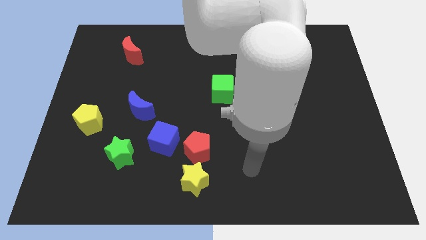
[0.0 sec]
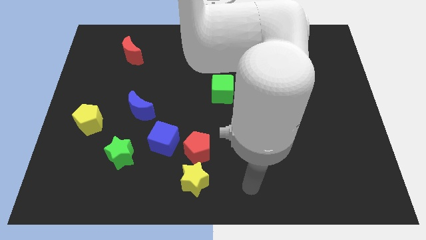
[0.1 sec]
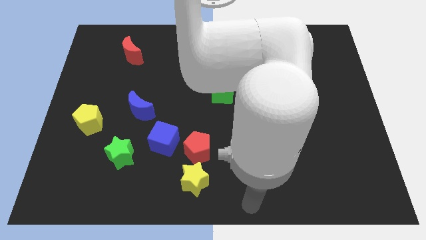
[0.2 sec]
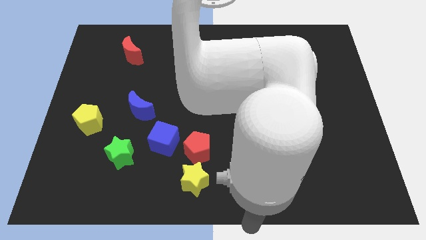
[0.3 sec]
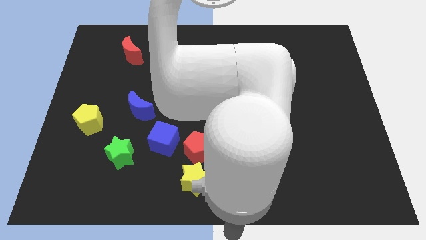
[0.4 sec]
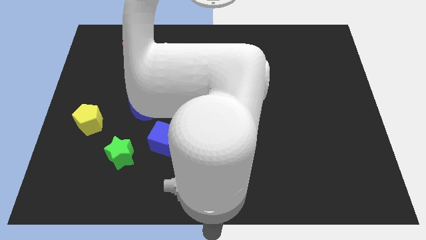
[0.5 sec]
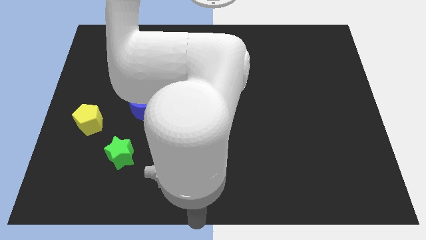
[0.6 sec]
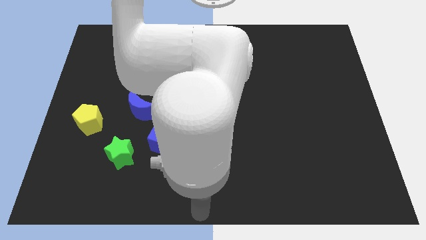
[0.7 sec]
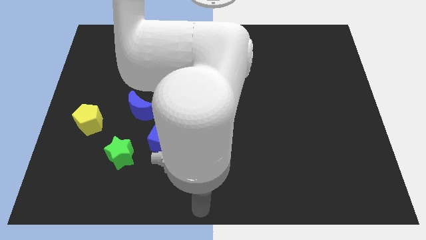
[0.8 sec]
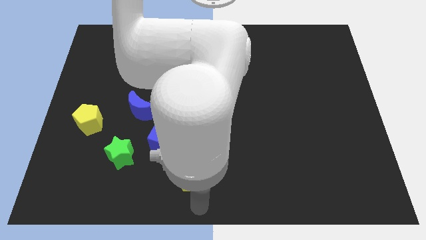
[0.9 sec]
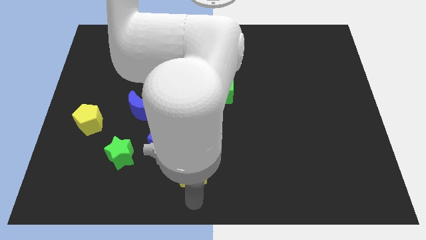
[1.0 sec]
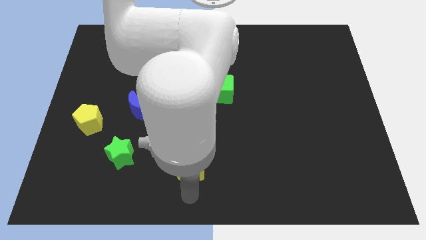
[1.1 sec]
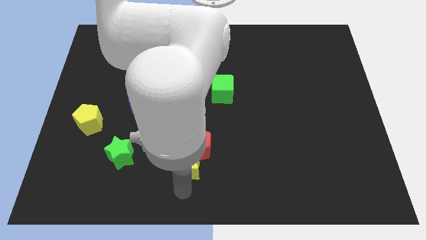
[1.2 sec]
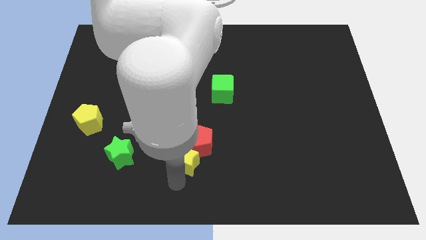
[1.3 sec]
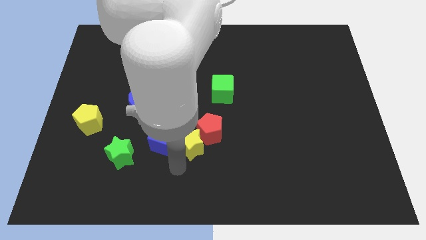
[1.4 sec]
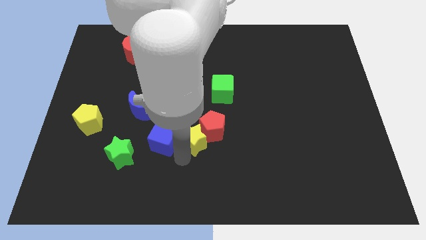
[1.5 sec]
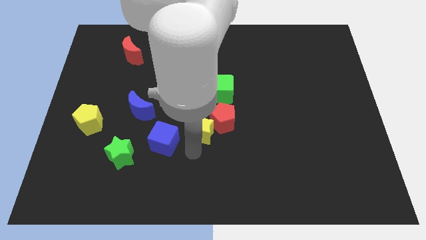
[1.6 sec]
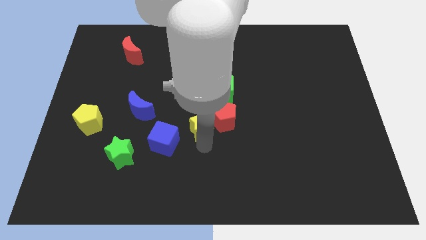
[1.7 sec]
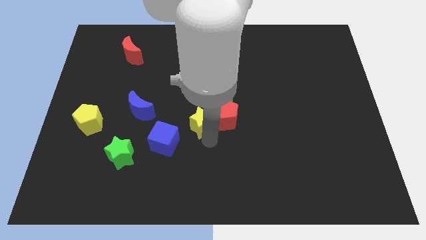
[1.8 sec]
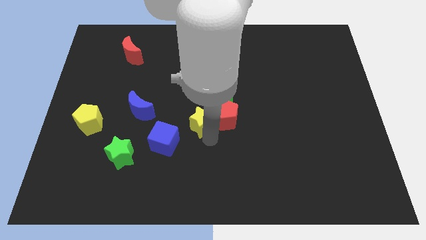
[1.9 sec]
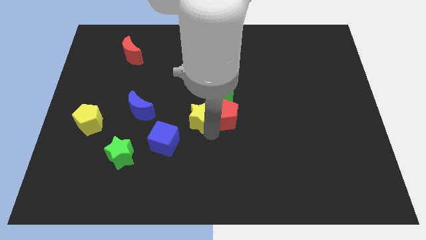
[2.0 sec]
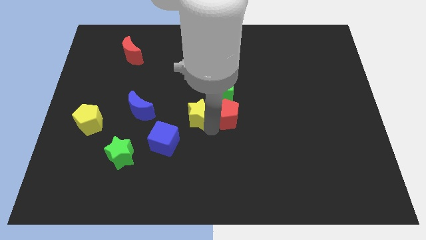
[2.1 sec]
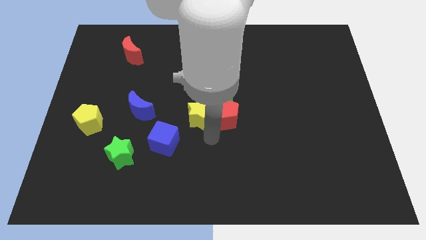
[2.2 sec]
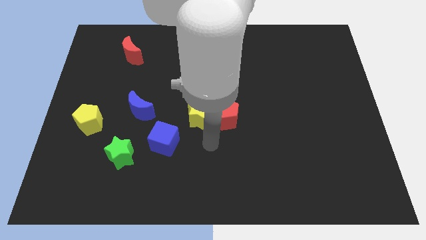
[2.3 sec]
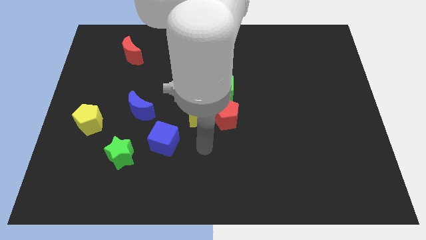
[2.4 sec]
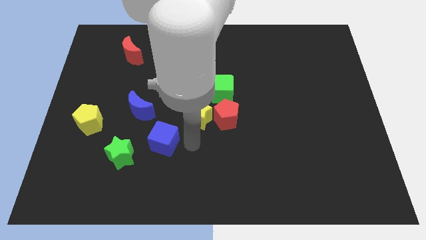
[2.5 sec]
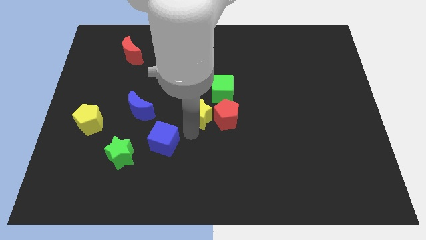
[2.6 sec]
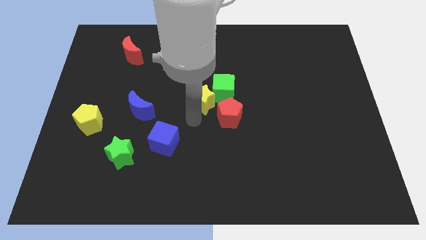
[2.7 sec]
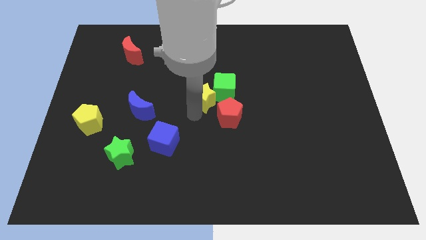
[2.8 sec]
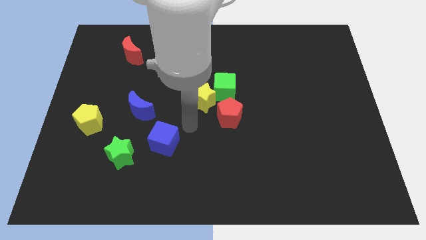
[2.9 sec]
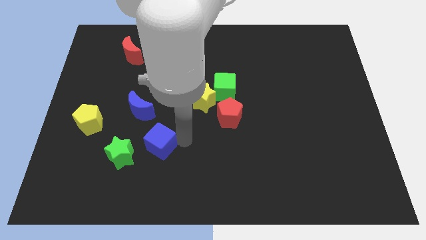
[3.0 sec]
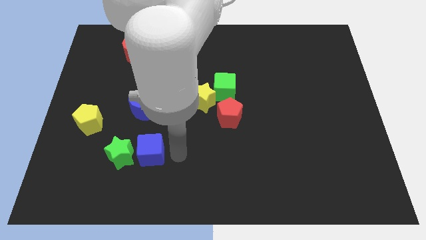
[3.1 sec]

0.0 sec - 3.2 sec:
move the yellow star and red pentagon into the green cube

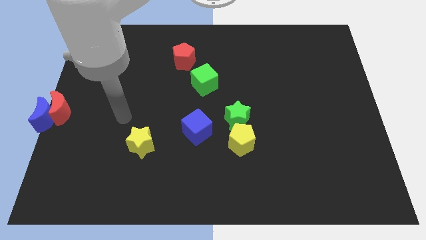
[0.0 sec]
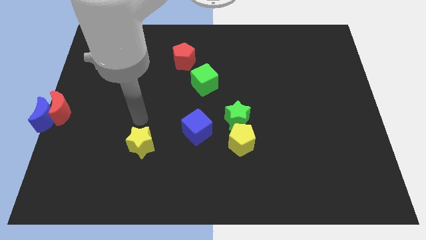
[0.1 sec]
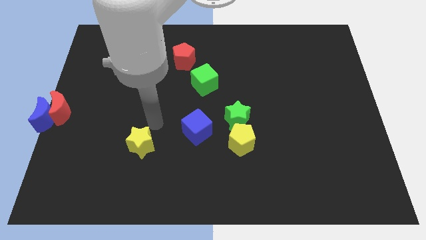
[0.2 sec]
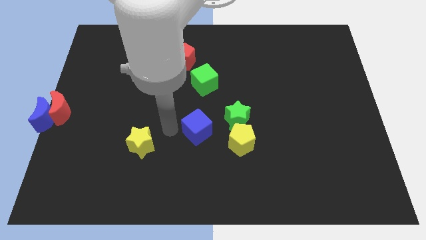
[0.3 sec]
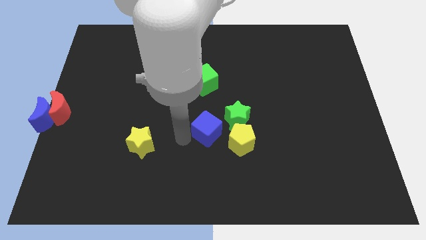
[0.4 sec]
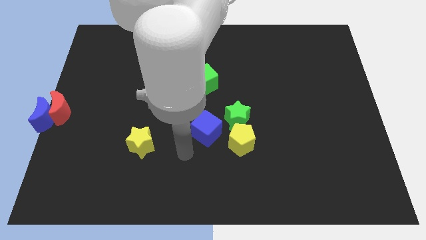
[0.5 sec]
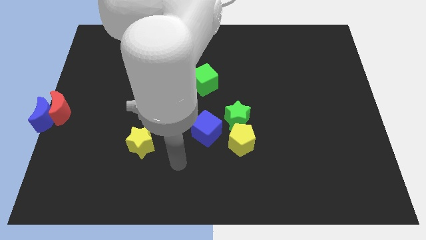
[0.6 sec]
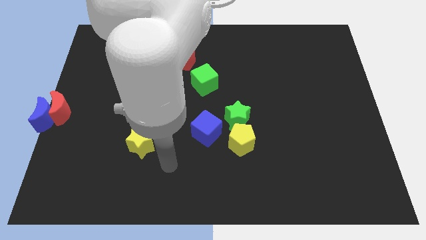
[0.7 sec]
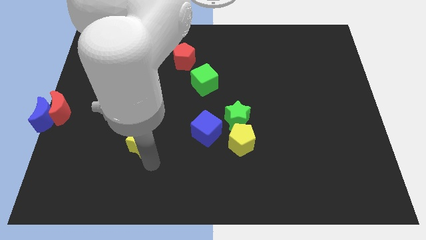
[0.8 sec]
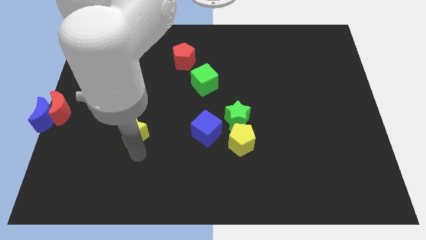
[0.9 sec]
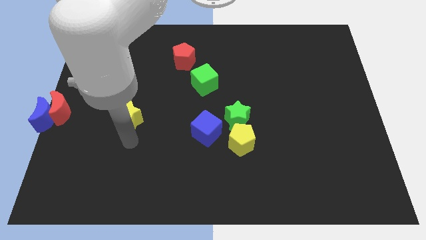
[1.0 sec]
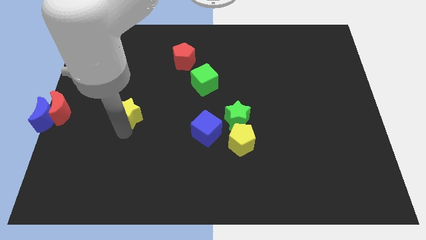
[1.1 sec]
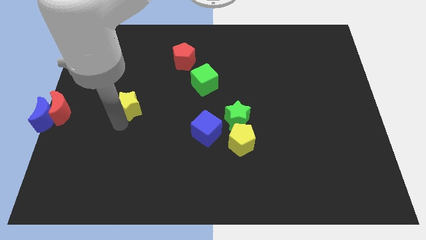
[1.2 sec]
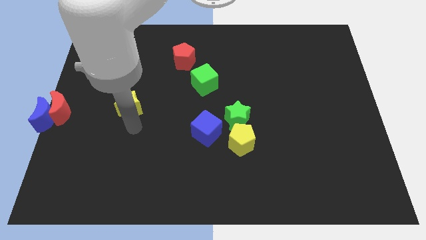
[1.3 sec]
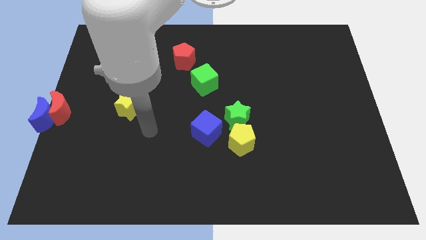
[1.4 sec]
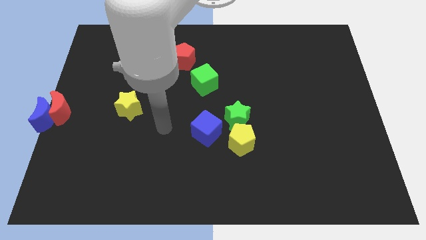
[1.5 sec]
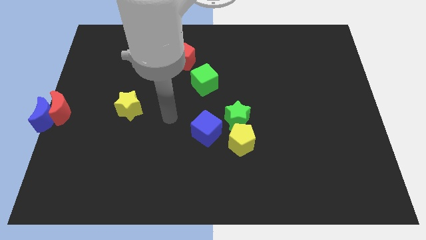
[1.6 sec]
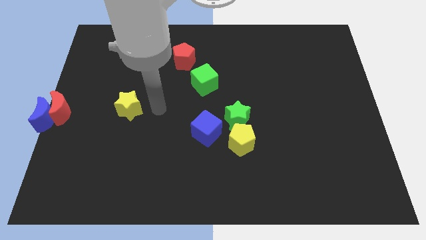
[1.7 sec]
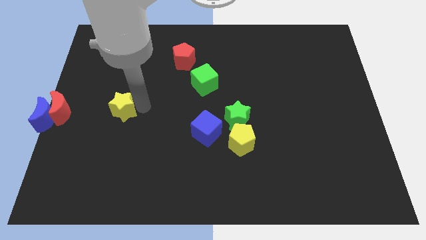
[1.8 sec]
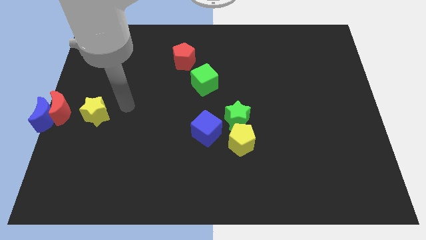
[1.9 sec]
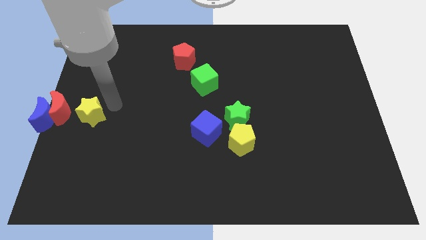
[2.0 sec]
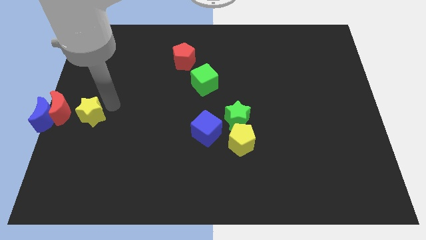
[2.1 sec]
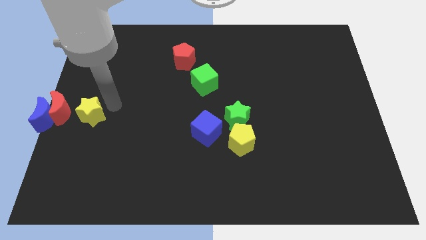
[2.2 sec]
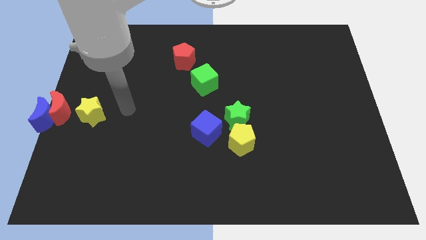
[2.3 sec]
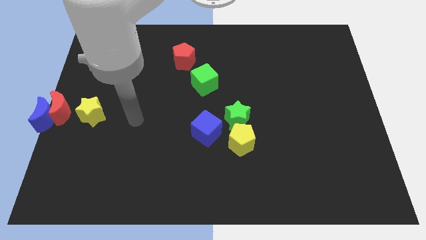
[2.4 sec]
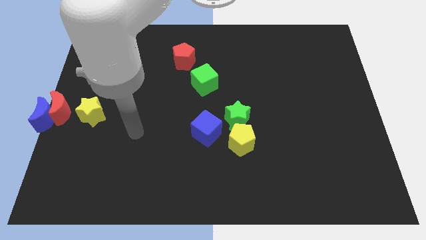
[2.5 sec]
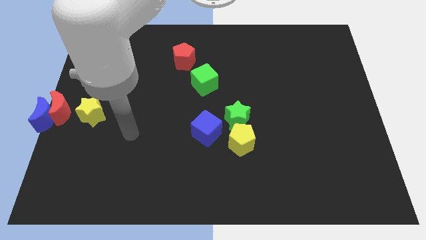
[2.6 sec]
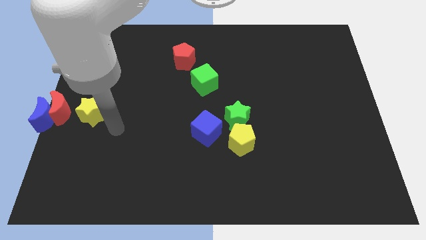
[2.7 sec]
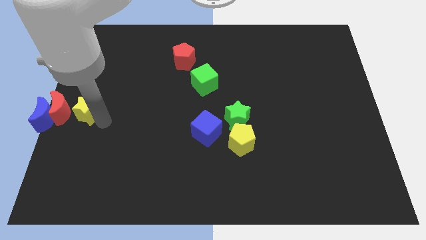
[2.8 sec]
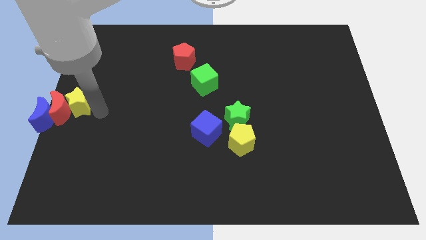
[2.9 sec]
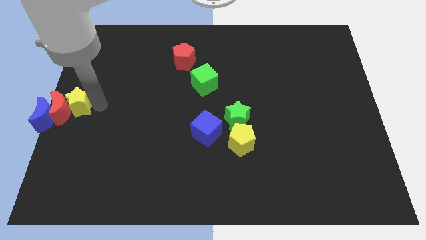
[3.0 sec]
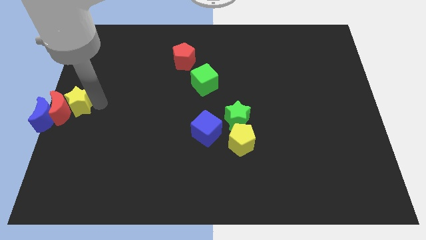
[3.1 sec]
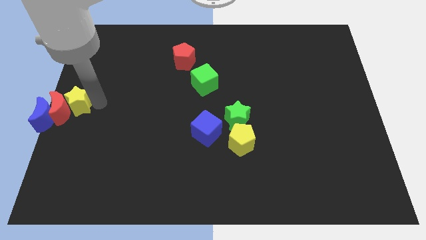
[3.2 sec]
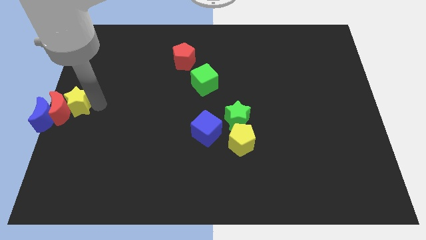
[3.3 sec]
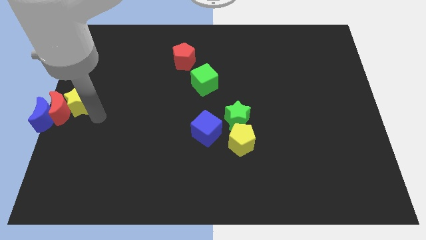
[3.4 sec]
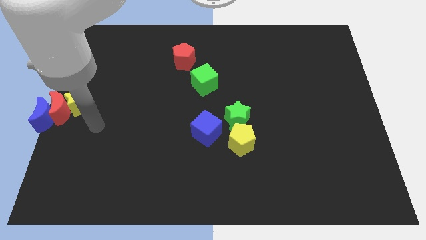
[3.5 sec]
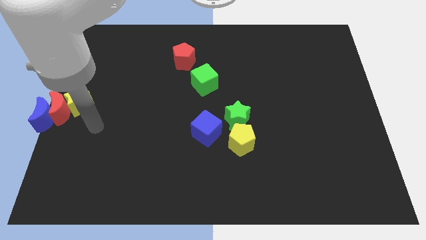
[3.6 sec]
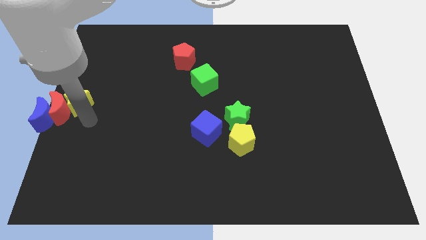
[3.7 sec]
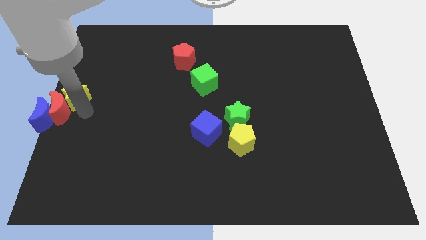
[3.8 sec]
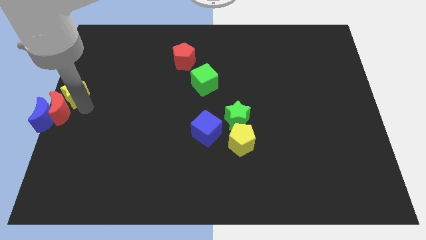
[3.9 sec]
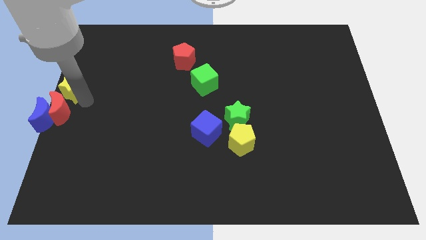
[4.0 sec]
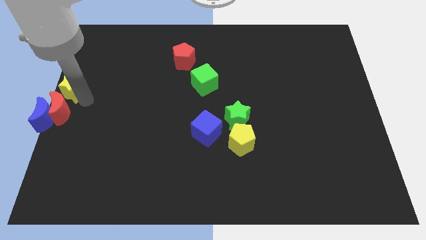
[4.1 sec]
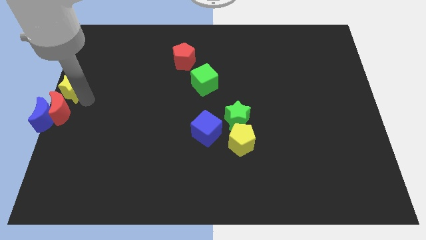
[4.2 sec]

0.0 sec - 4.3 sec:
push the yellow star towards the top right of the red crescent

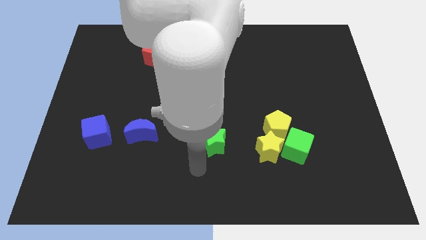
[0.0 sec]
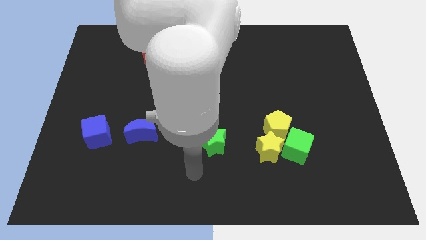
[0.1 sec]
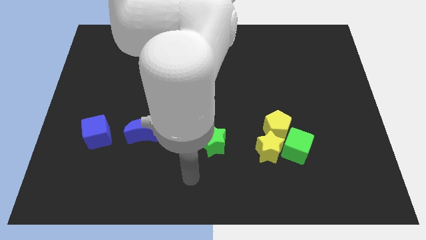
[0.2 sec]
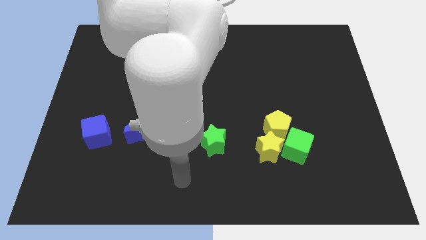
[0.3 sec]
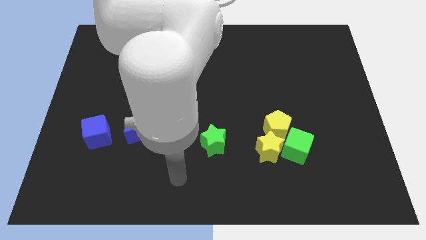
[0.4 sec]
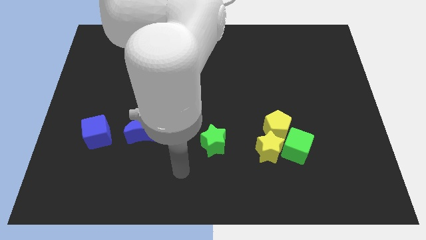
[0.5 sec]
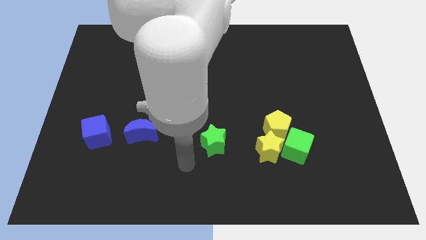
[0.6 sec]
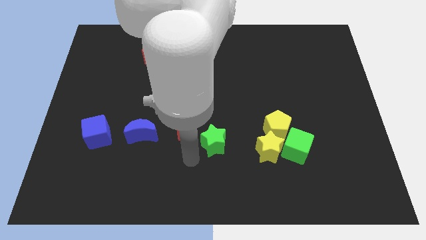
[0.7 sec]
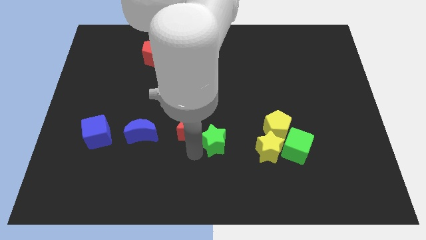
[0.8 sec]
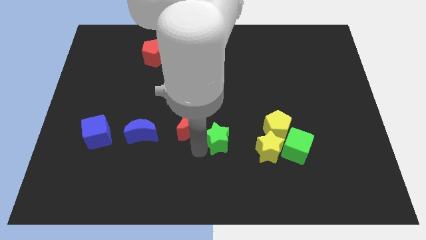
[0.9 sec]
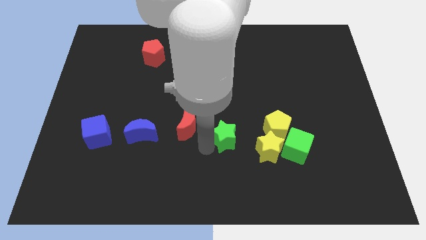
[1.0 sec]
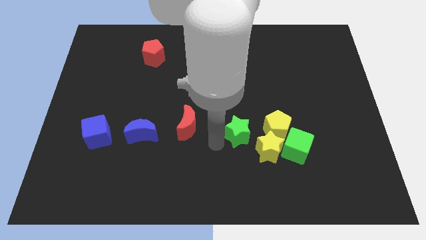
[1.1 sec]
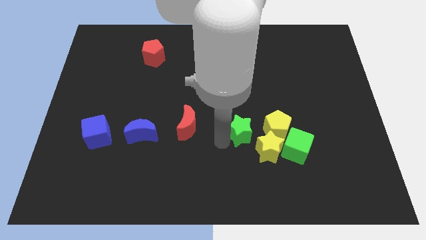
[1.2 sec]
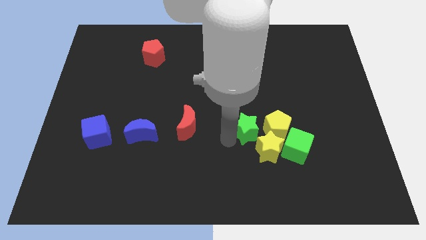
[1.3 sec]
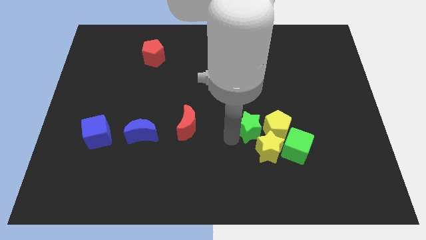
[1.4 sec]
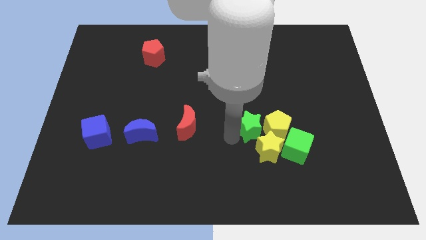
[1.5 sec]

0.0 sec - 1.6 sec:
place the green star to the left side of the yellow pentagon
